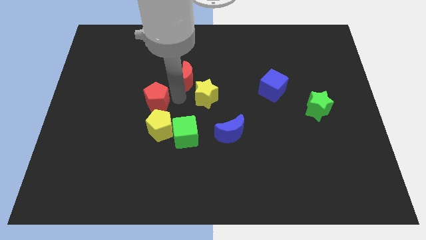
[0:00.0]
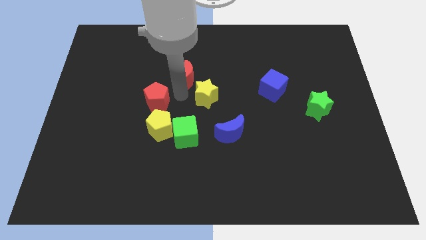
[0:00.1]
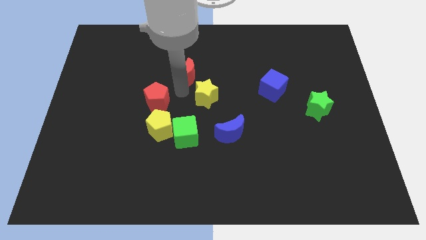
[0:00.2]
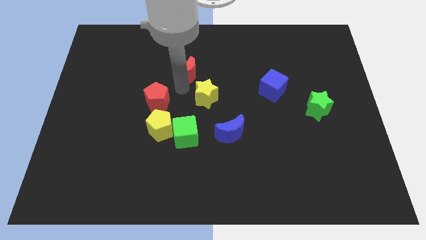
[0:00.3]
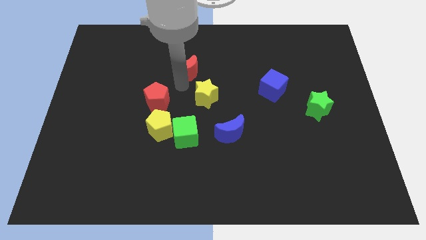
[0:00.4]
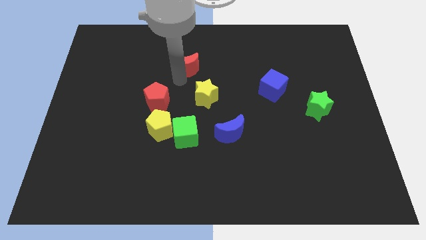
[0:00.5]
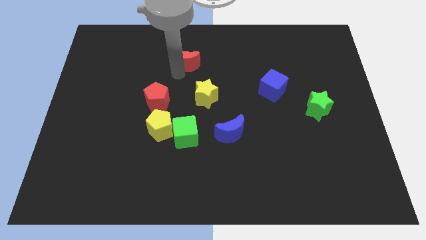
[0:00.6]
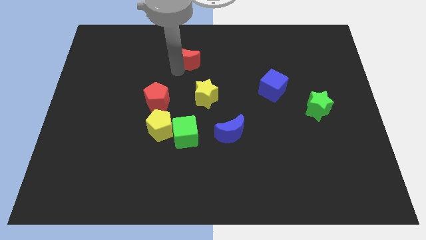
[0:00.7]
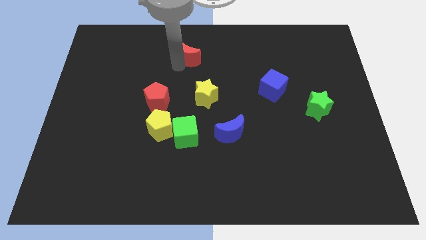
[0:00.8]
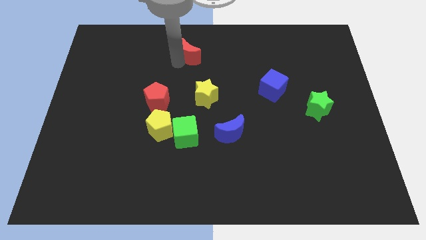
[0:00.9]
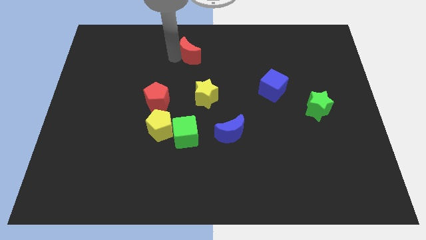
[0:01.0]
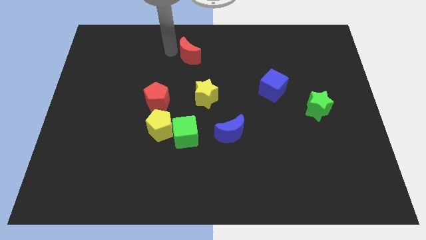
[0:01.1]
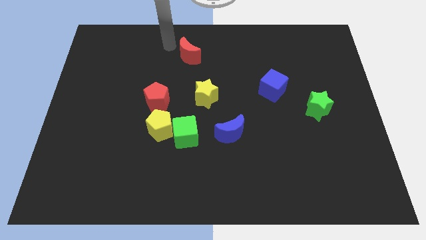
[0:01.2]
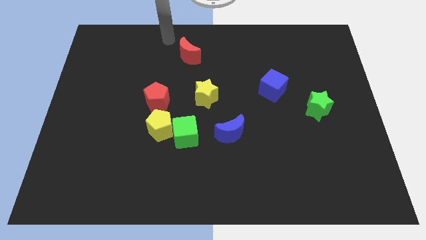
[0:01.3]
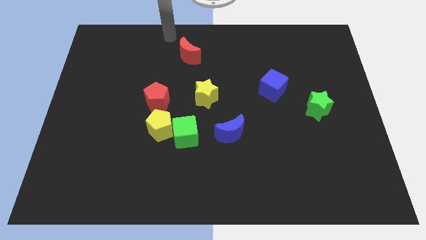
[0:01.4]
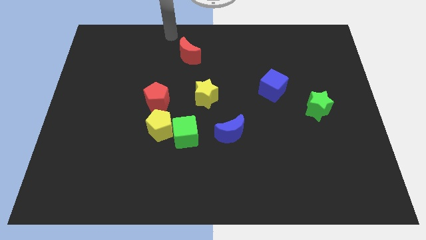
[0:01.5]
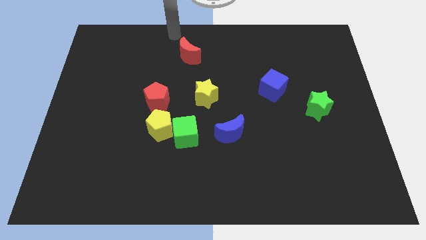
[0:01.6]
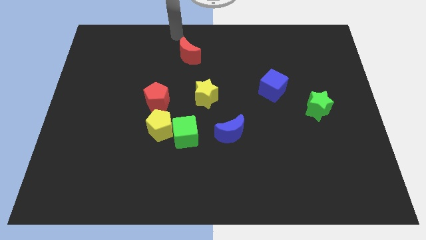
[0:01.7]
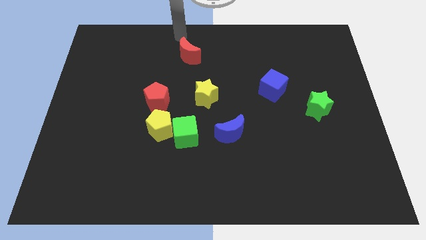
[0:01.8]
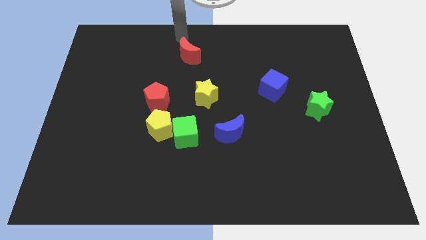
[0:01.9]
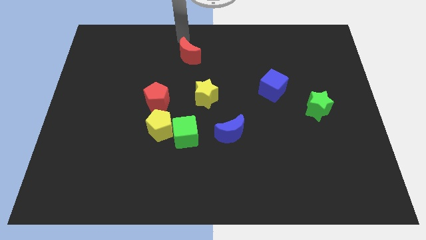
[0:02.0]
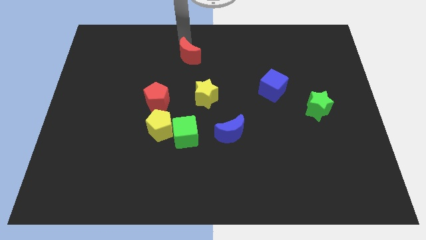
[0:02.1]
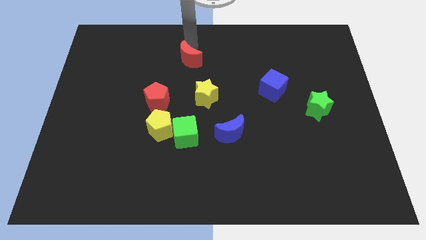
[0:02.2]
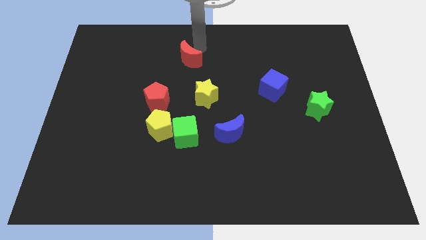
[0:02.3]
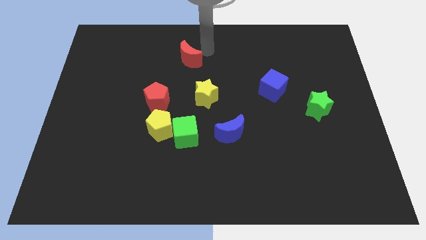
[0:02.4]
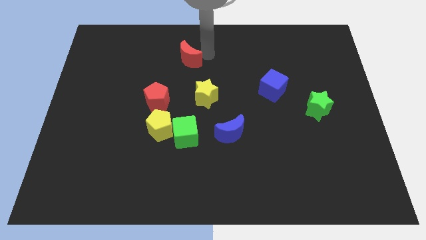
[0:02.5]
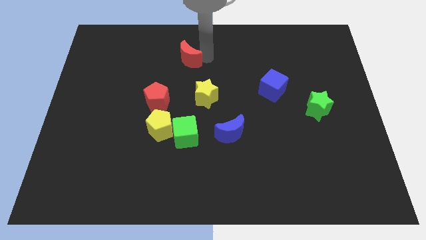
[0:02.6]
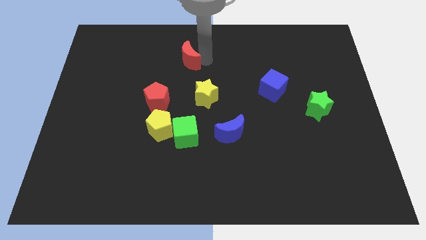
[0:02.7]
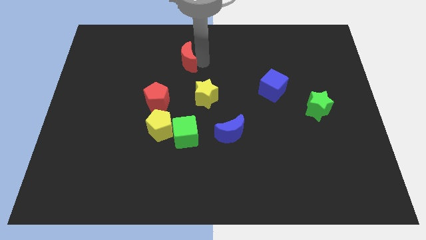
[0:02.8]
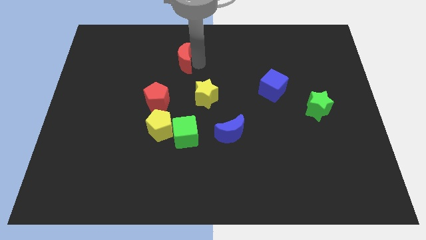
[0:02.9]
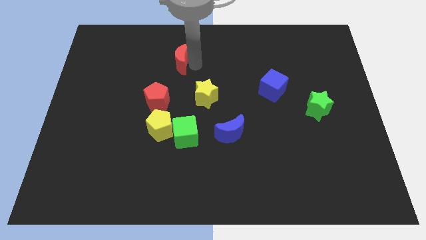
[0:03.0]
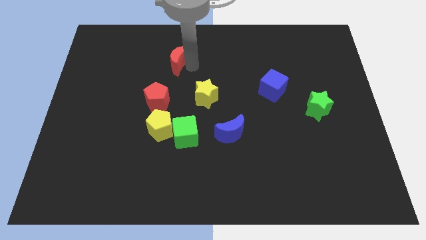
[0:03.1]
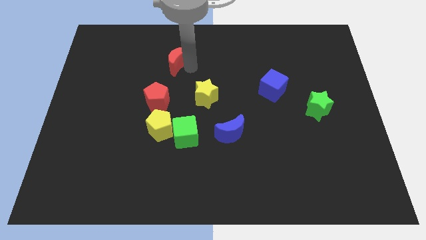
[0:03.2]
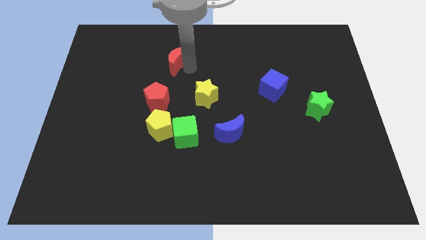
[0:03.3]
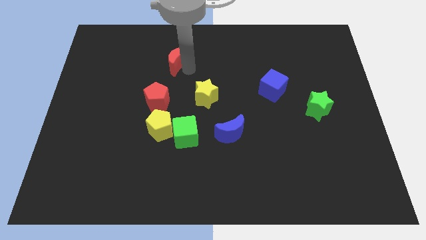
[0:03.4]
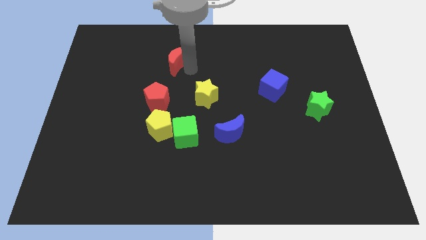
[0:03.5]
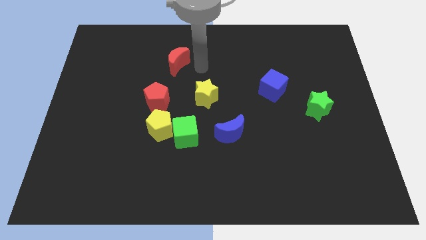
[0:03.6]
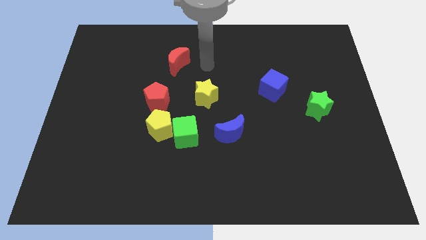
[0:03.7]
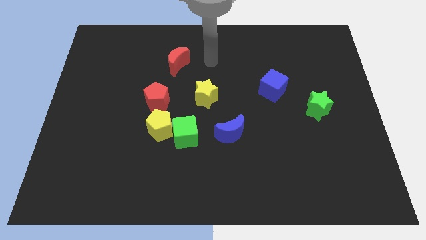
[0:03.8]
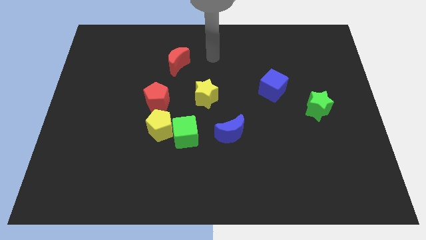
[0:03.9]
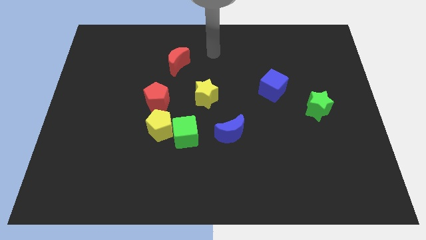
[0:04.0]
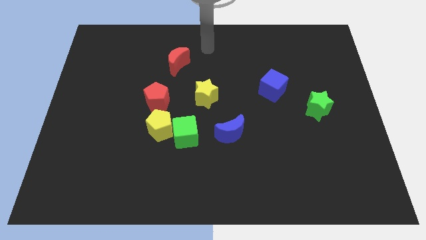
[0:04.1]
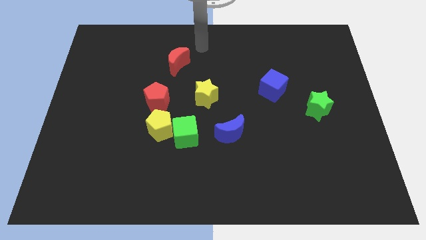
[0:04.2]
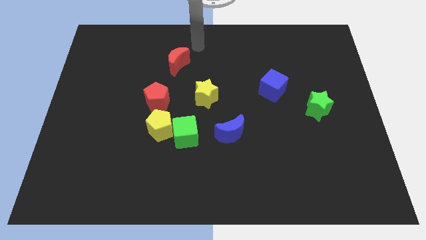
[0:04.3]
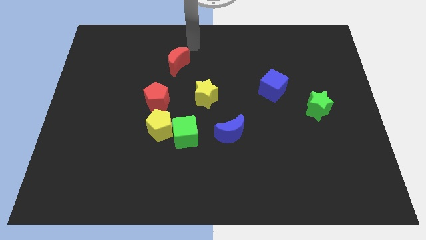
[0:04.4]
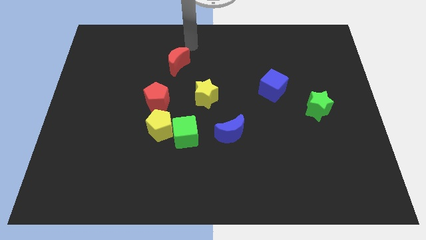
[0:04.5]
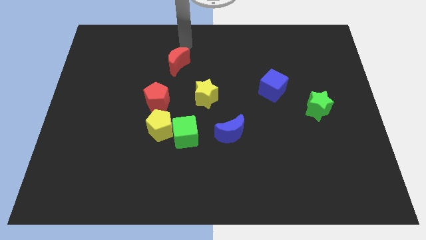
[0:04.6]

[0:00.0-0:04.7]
move red moon right above the red pentagon

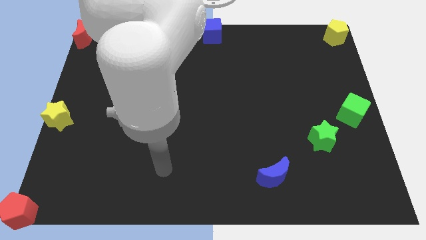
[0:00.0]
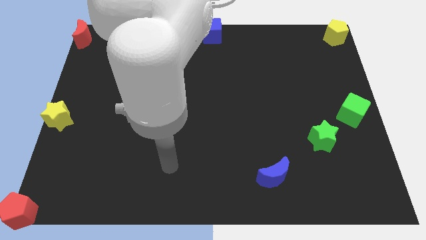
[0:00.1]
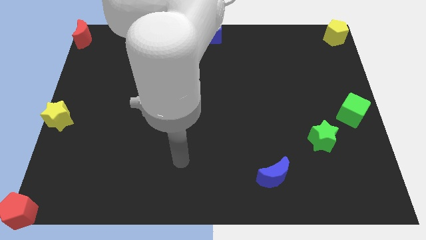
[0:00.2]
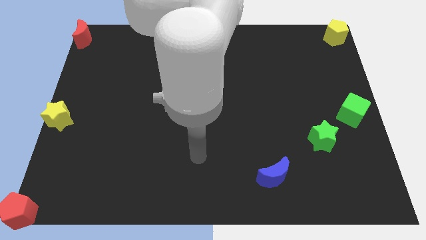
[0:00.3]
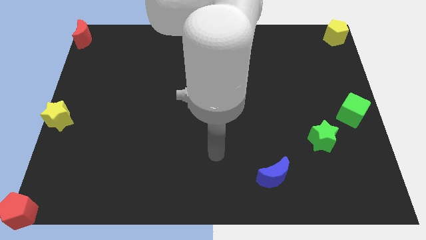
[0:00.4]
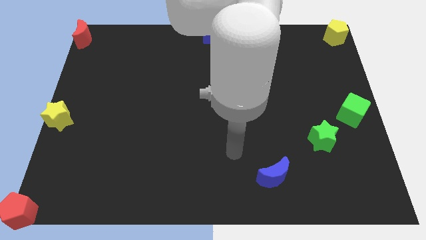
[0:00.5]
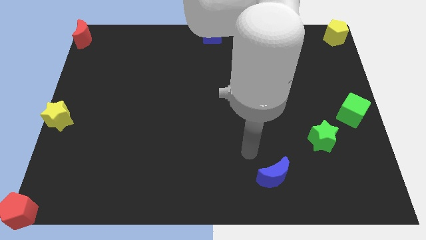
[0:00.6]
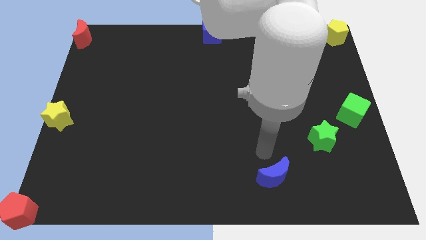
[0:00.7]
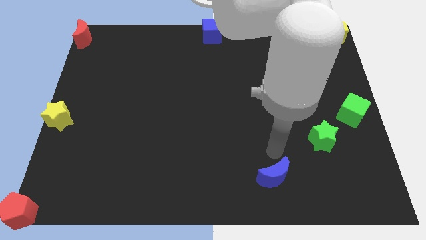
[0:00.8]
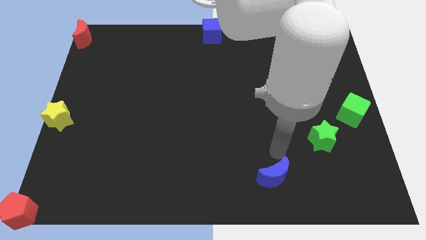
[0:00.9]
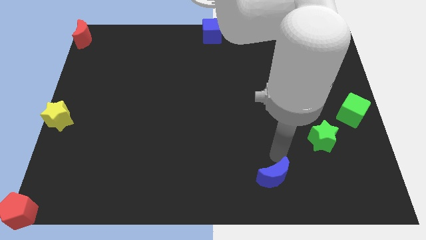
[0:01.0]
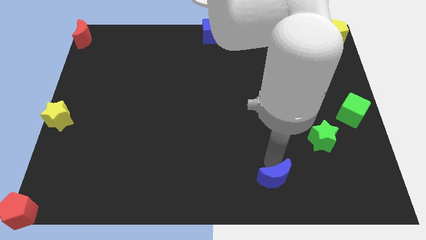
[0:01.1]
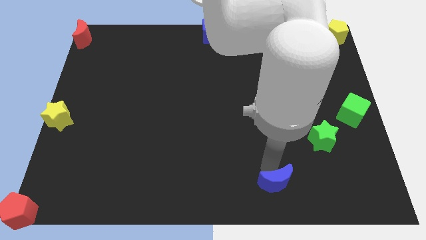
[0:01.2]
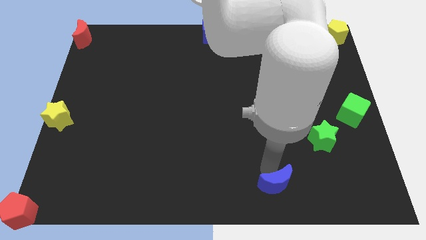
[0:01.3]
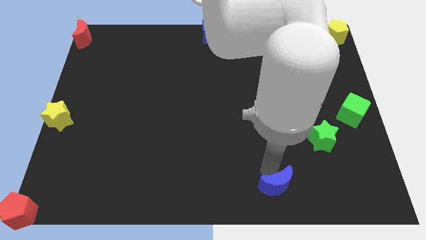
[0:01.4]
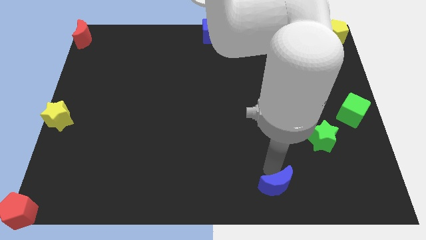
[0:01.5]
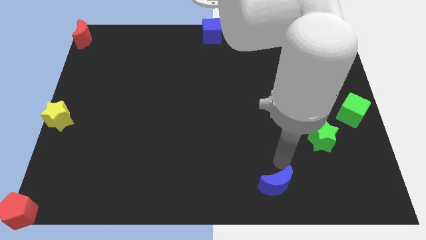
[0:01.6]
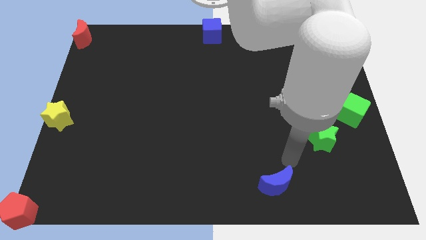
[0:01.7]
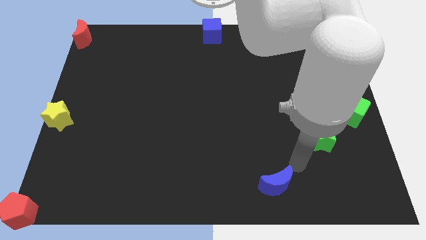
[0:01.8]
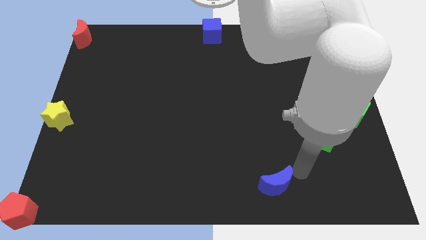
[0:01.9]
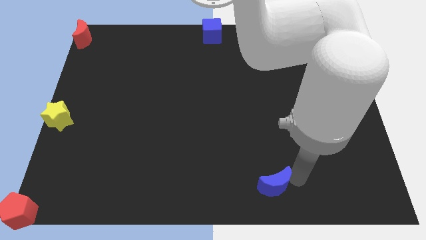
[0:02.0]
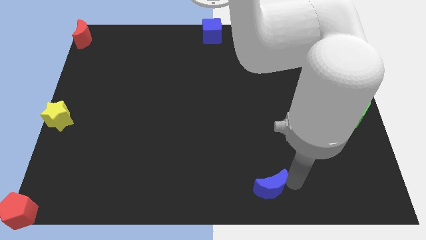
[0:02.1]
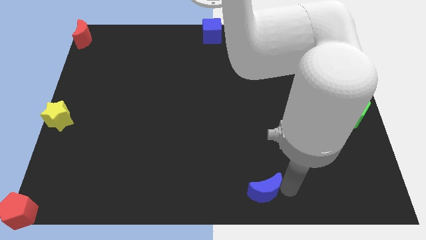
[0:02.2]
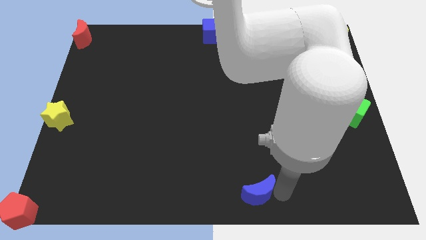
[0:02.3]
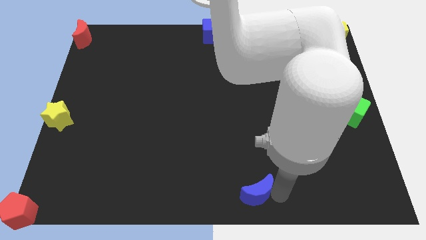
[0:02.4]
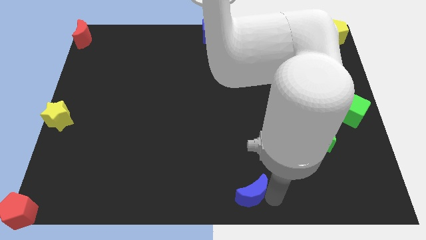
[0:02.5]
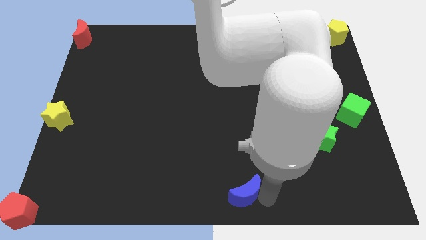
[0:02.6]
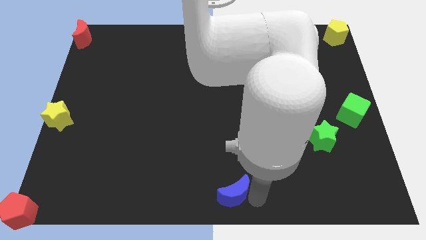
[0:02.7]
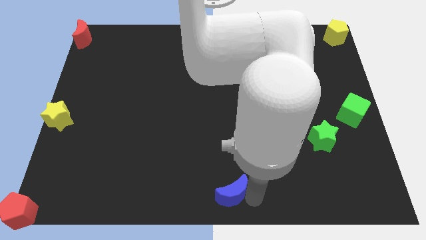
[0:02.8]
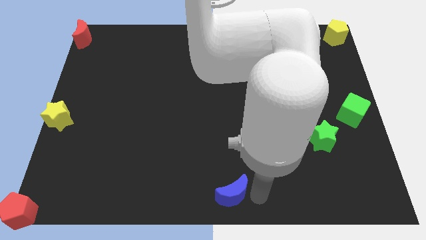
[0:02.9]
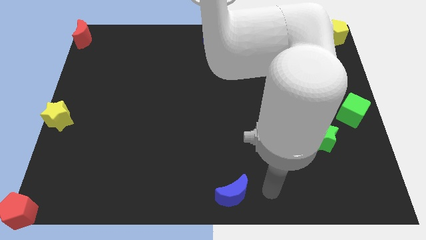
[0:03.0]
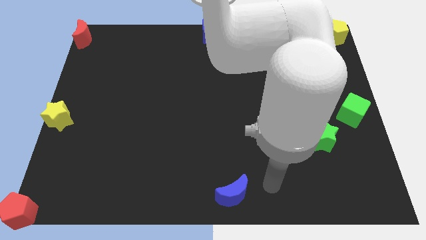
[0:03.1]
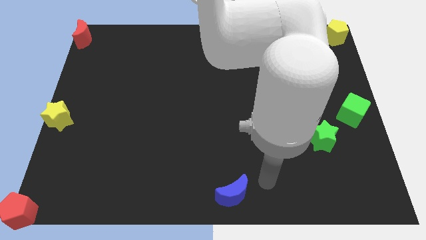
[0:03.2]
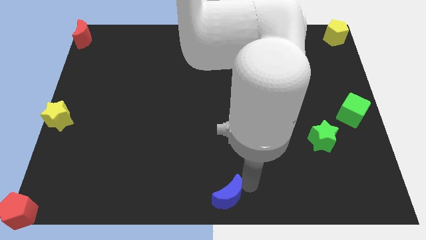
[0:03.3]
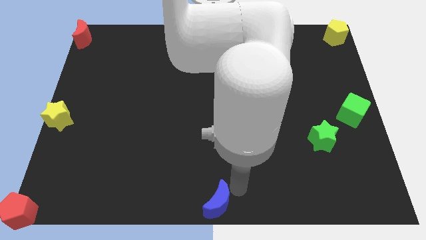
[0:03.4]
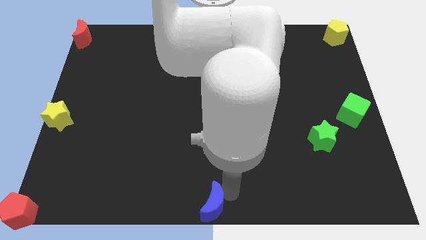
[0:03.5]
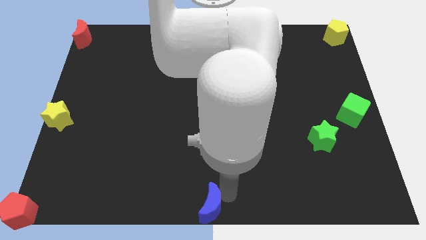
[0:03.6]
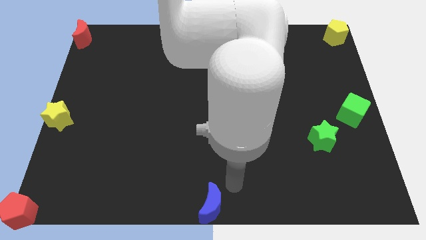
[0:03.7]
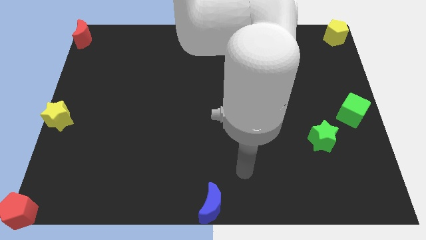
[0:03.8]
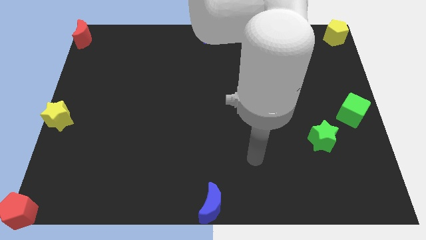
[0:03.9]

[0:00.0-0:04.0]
push the blue moon to the bottom center

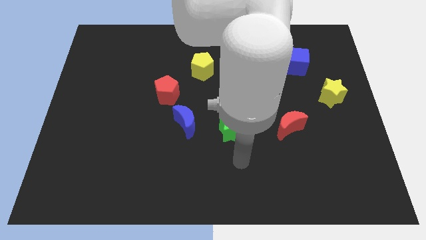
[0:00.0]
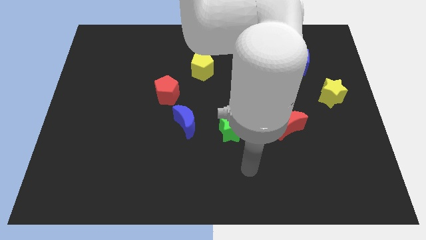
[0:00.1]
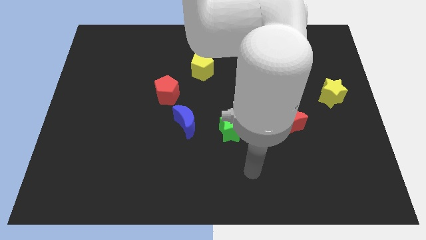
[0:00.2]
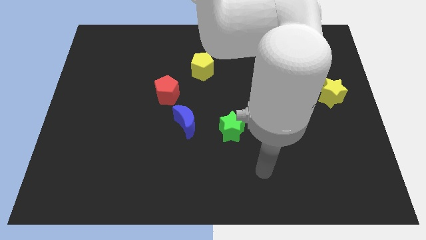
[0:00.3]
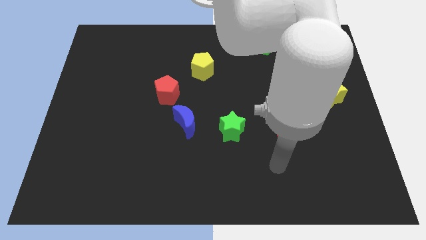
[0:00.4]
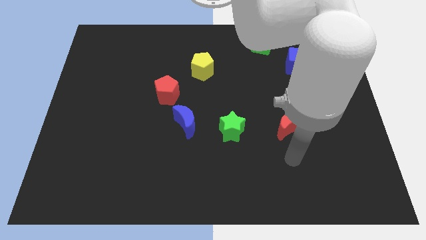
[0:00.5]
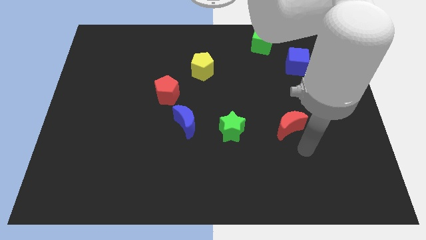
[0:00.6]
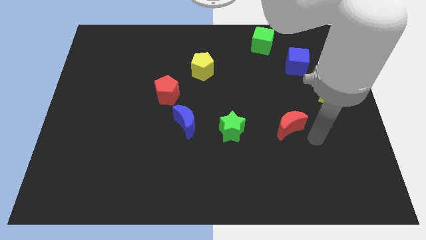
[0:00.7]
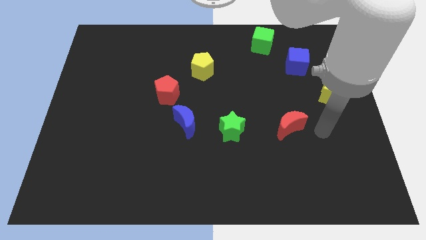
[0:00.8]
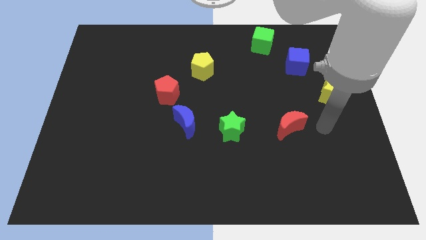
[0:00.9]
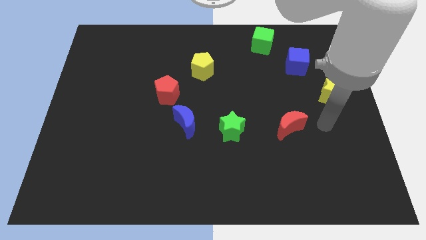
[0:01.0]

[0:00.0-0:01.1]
move your arm to the right of the red moon
